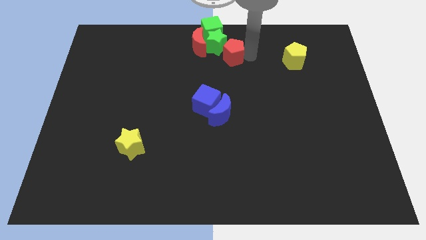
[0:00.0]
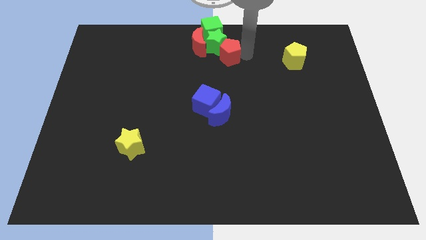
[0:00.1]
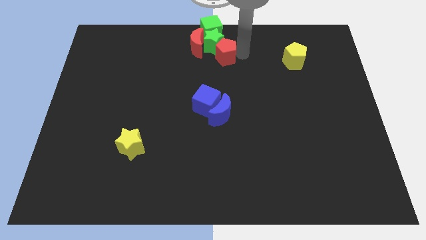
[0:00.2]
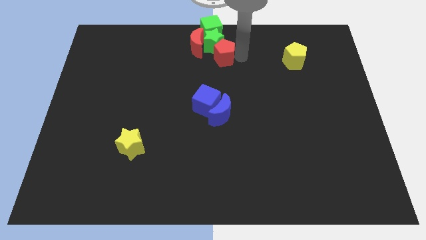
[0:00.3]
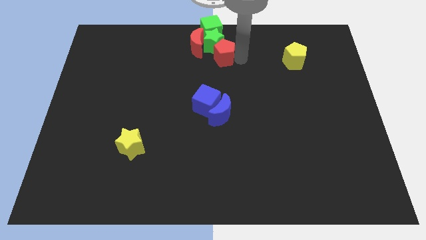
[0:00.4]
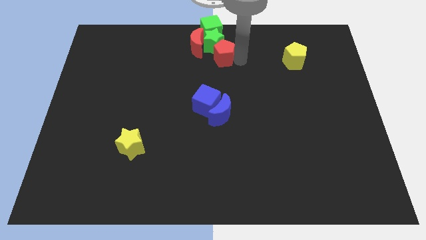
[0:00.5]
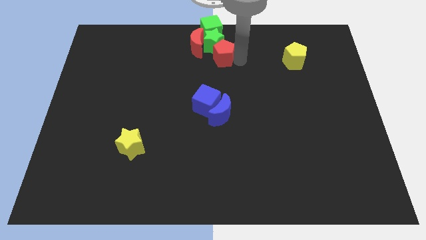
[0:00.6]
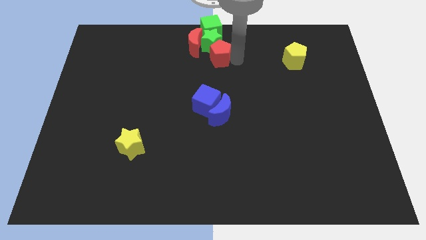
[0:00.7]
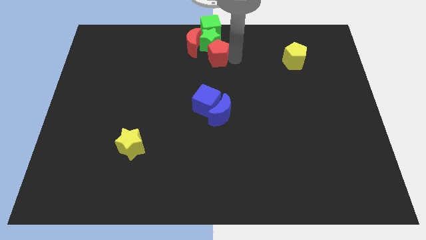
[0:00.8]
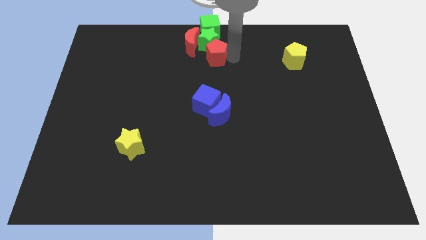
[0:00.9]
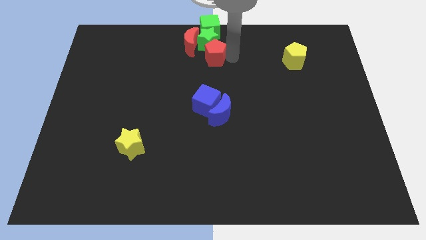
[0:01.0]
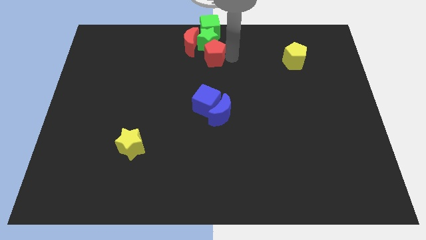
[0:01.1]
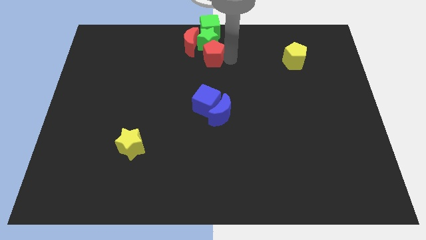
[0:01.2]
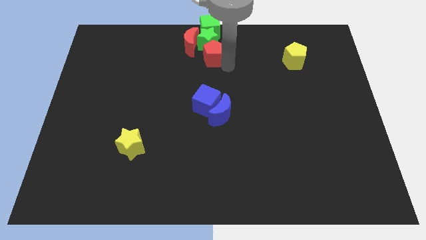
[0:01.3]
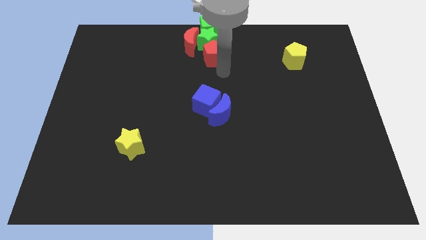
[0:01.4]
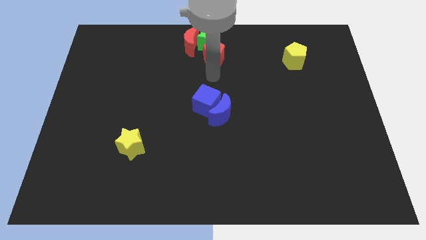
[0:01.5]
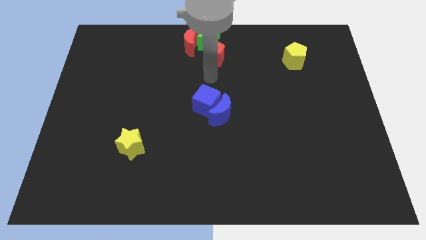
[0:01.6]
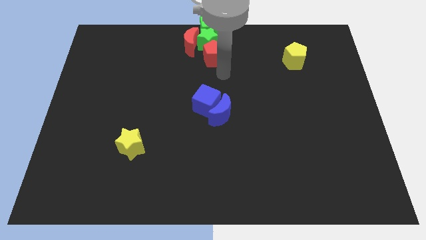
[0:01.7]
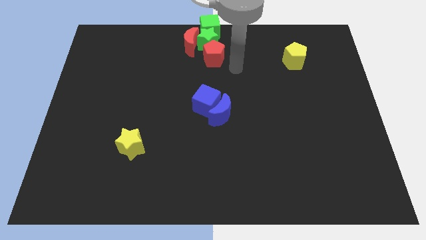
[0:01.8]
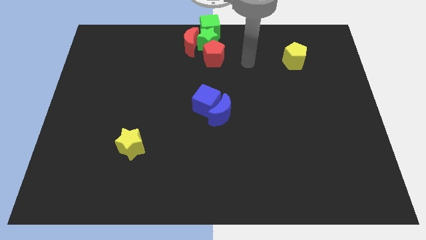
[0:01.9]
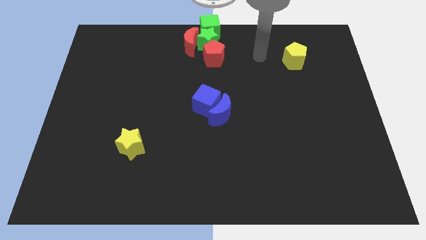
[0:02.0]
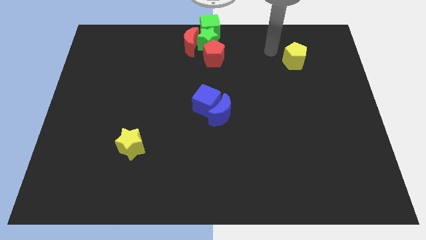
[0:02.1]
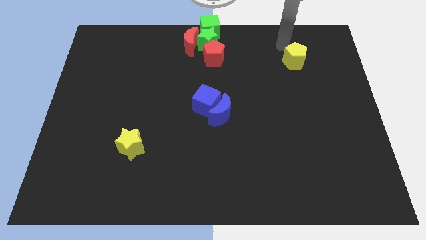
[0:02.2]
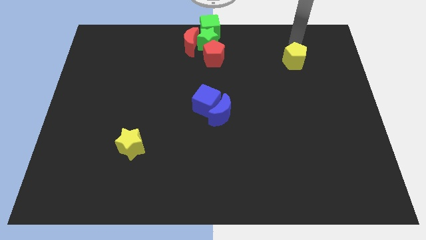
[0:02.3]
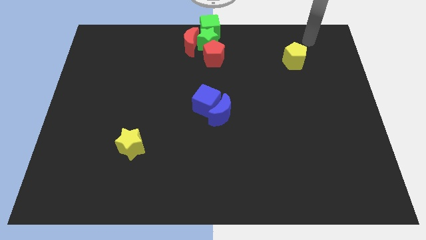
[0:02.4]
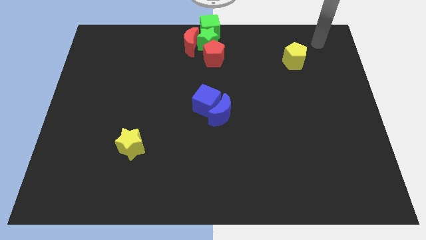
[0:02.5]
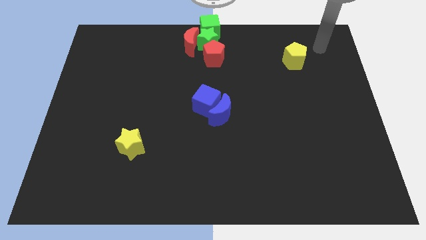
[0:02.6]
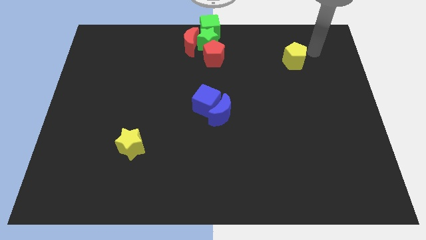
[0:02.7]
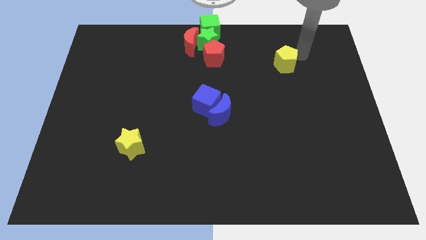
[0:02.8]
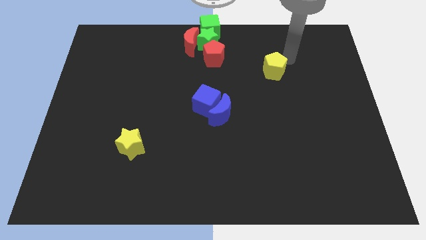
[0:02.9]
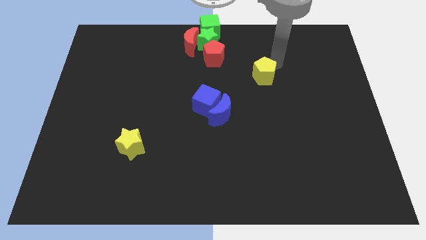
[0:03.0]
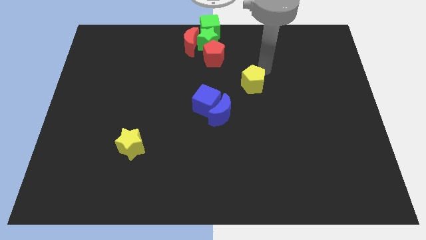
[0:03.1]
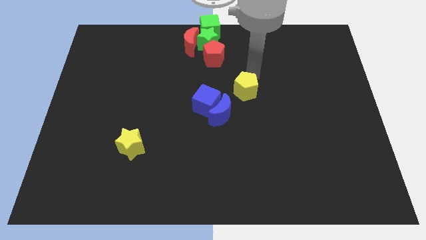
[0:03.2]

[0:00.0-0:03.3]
slide the yellow pentagon towards the blue blocks

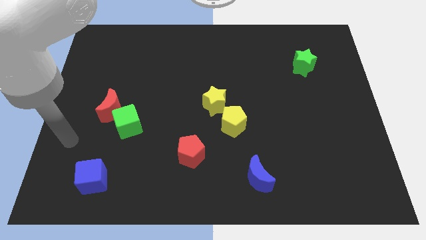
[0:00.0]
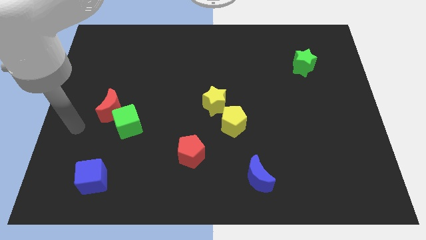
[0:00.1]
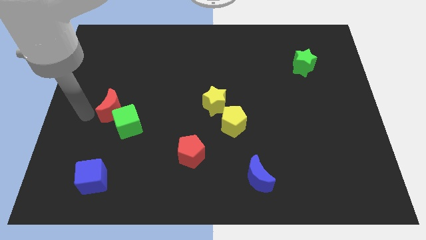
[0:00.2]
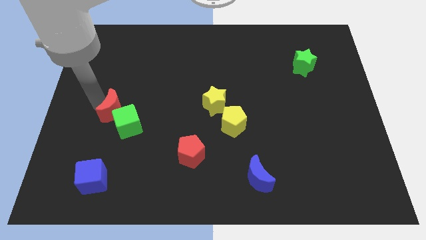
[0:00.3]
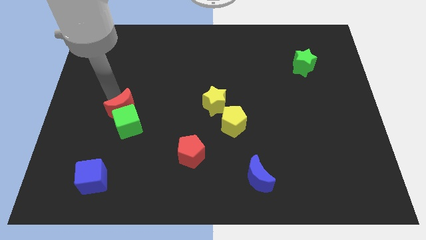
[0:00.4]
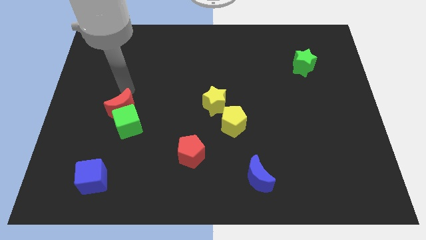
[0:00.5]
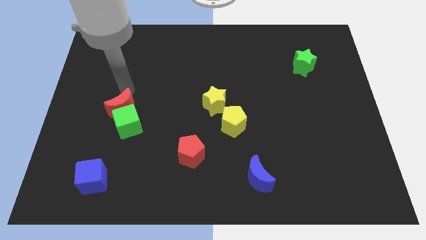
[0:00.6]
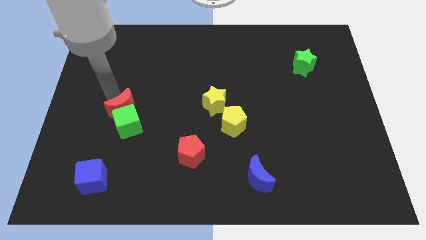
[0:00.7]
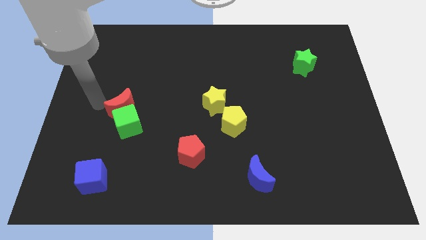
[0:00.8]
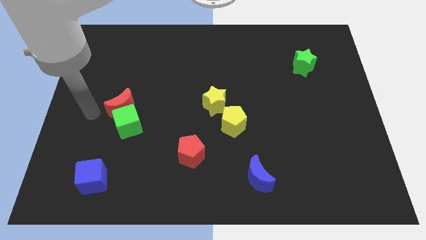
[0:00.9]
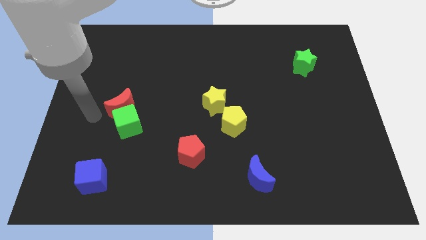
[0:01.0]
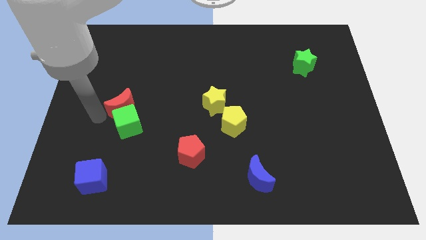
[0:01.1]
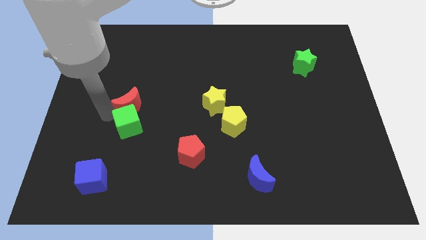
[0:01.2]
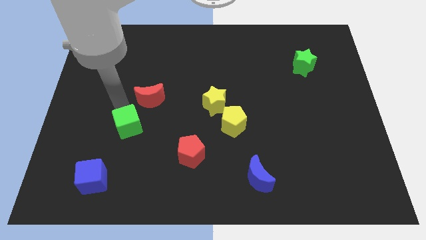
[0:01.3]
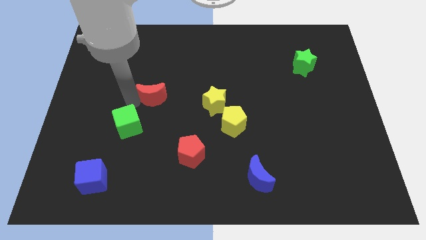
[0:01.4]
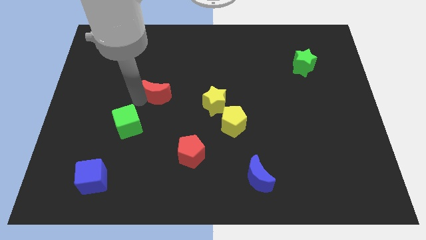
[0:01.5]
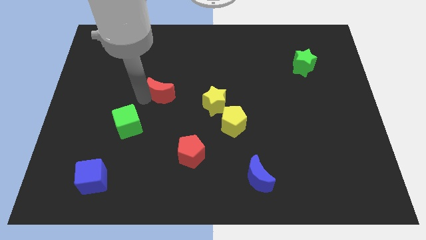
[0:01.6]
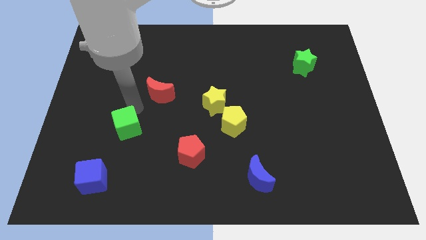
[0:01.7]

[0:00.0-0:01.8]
separate the red crescent from green cube

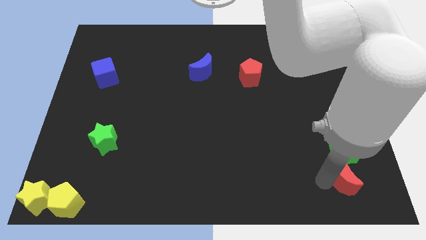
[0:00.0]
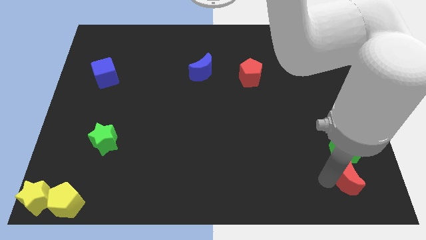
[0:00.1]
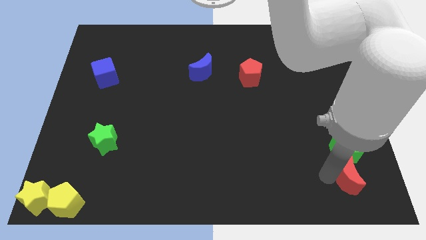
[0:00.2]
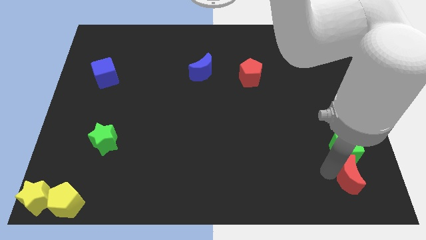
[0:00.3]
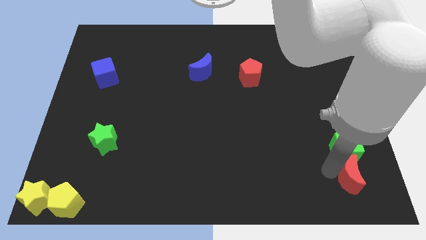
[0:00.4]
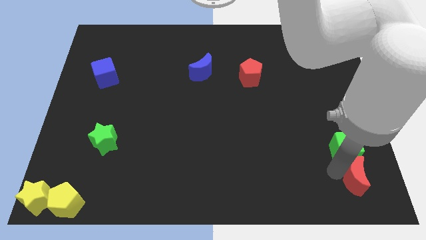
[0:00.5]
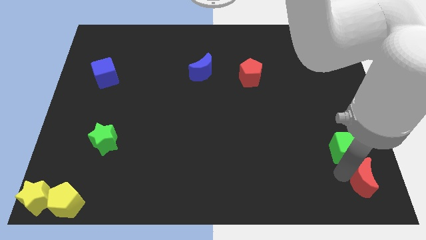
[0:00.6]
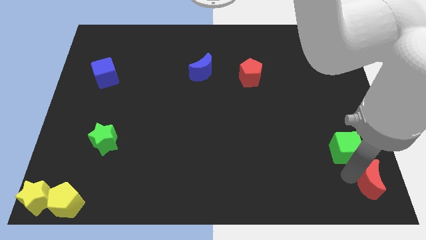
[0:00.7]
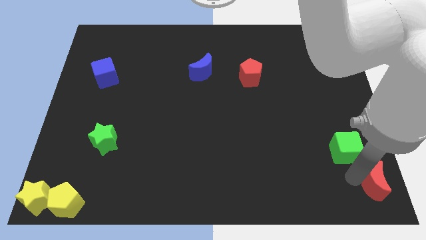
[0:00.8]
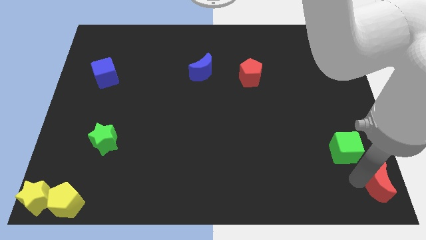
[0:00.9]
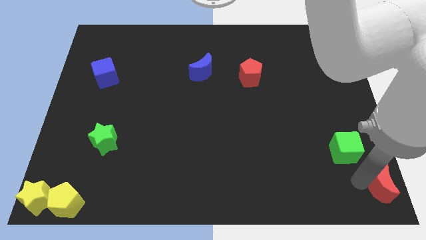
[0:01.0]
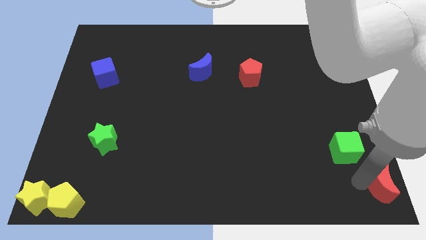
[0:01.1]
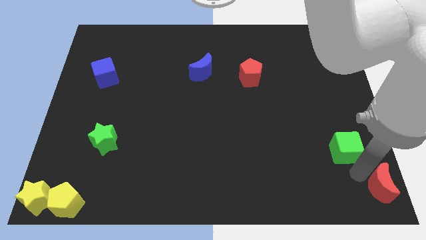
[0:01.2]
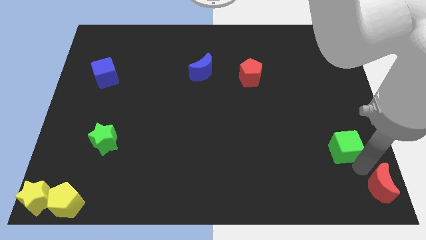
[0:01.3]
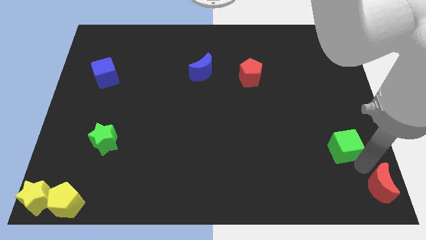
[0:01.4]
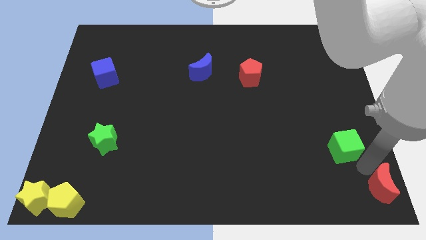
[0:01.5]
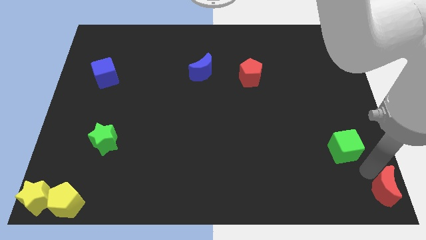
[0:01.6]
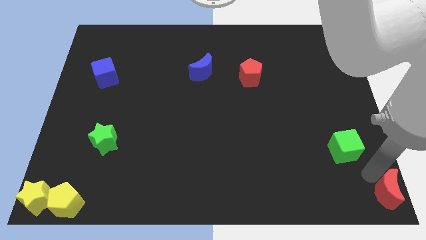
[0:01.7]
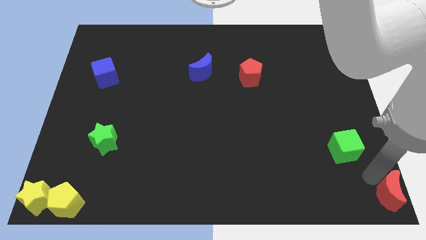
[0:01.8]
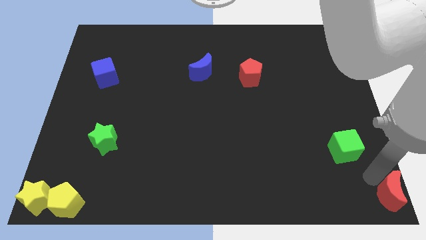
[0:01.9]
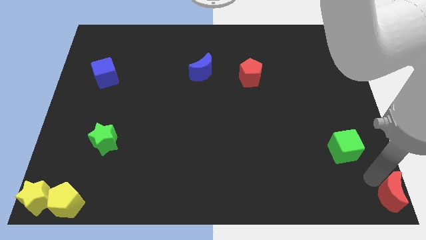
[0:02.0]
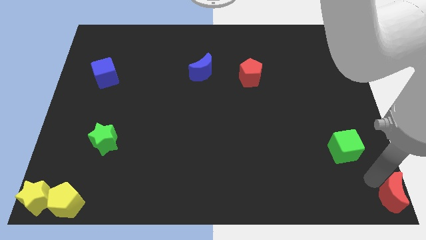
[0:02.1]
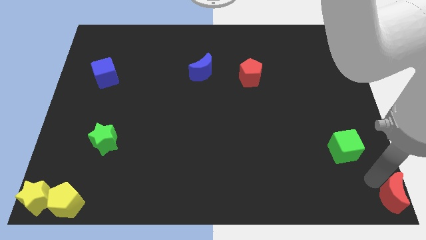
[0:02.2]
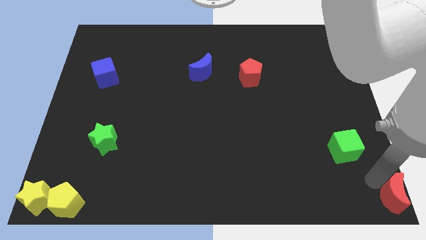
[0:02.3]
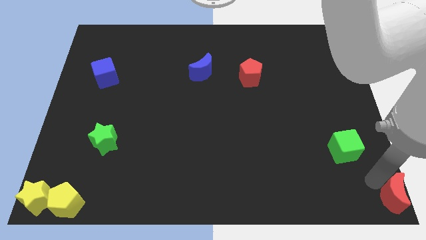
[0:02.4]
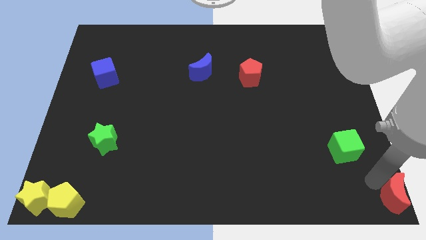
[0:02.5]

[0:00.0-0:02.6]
push the red moon to the bottom right corner of the board

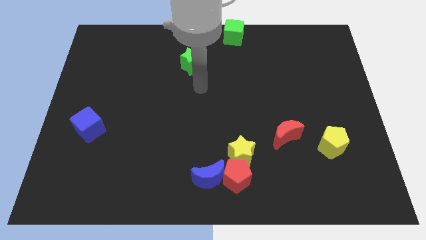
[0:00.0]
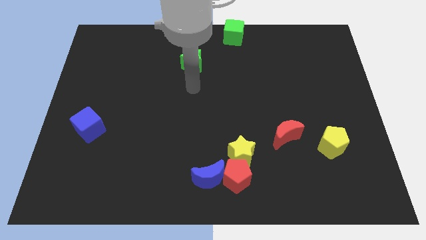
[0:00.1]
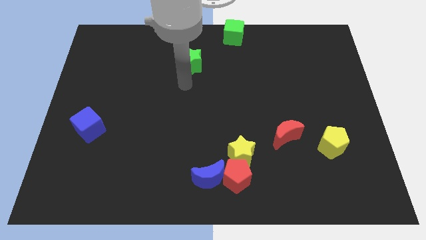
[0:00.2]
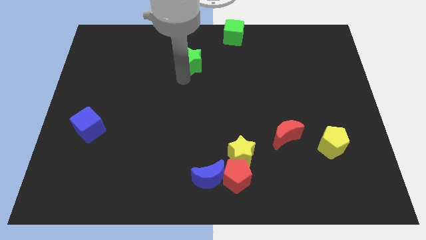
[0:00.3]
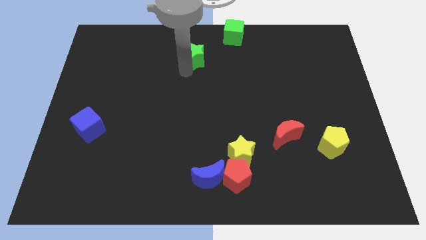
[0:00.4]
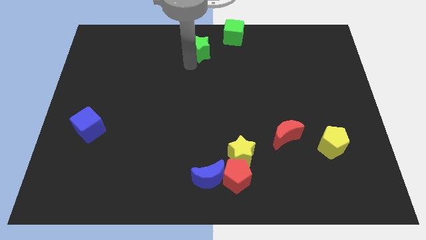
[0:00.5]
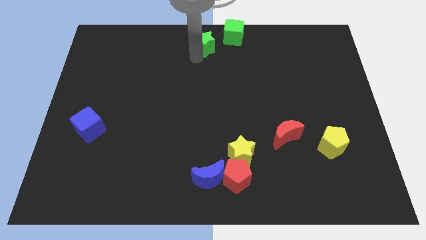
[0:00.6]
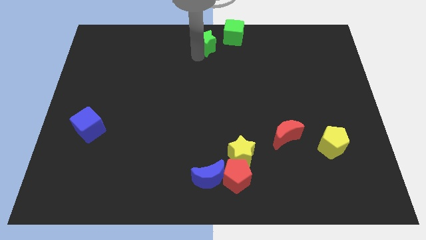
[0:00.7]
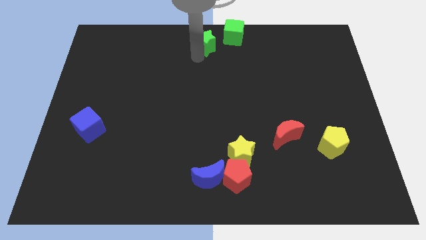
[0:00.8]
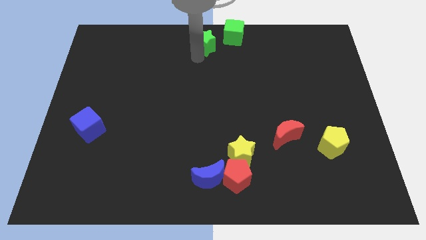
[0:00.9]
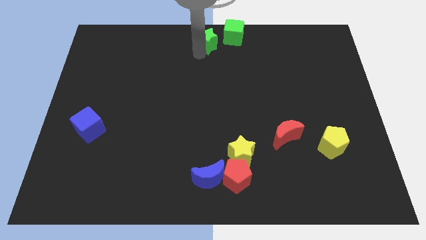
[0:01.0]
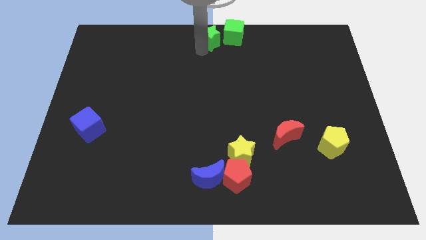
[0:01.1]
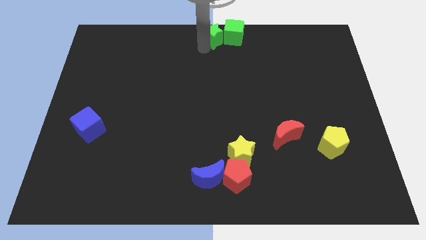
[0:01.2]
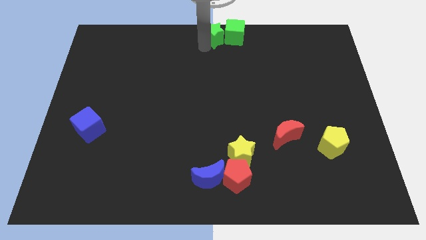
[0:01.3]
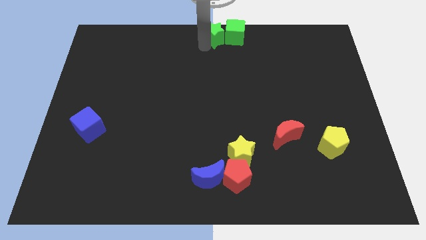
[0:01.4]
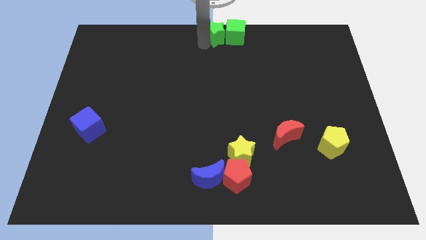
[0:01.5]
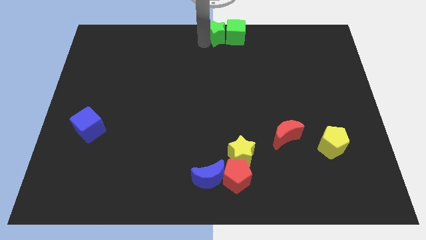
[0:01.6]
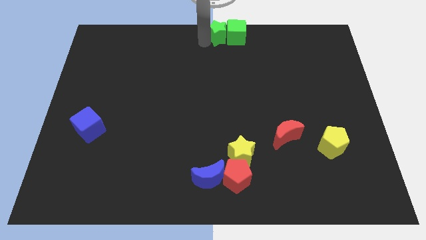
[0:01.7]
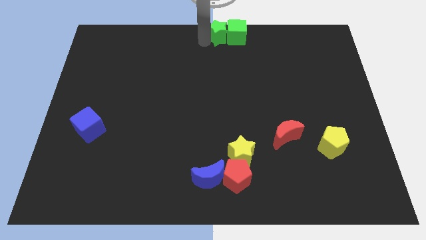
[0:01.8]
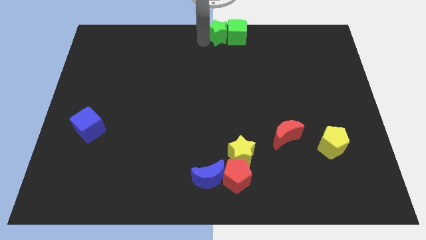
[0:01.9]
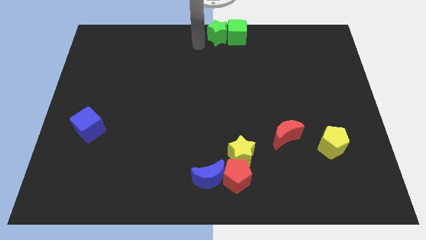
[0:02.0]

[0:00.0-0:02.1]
push the green star towards the left of the green cube
